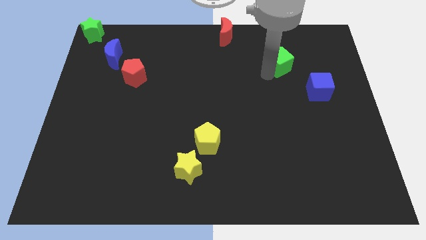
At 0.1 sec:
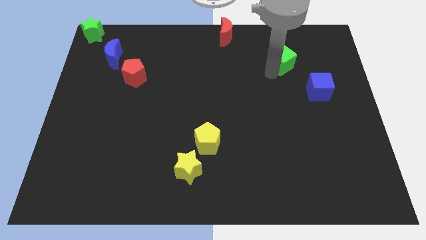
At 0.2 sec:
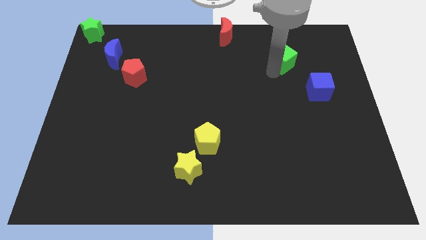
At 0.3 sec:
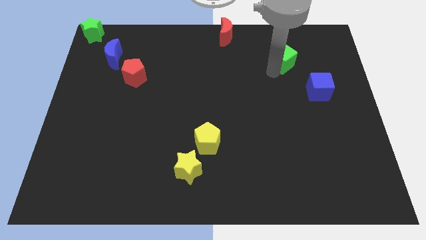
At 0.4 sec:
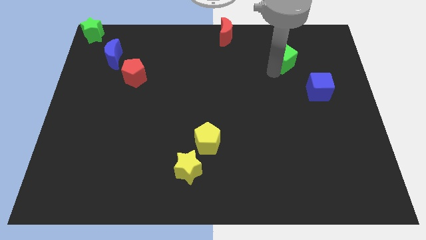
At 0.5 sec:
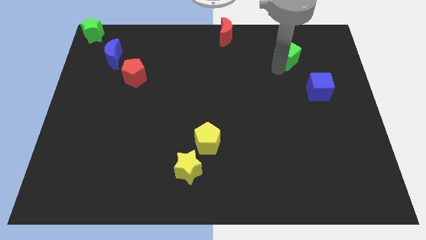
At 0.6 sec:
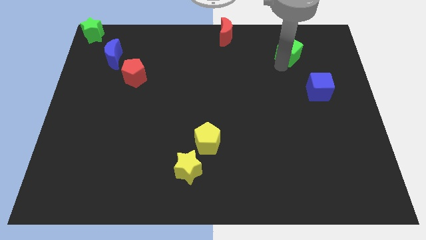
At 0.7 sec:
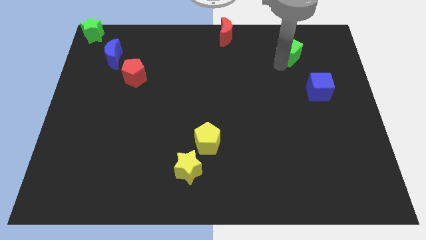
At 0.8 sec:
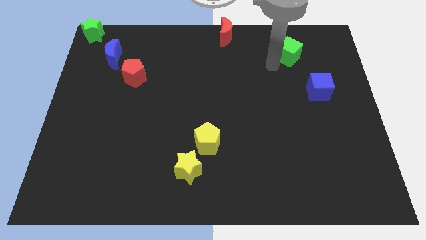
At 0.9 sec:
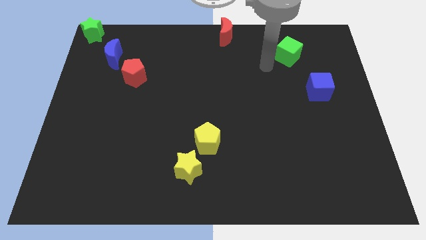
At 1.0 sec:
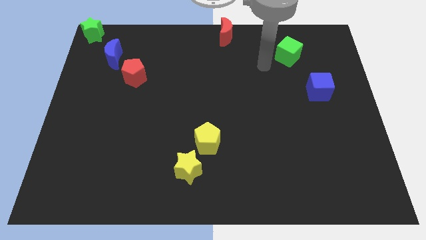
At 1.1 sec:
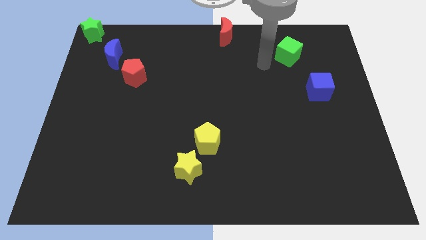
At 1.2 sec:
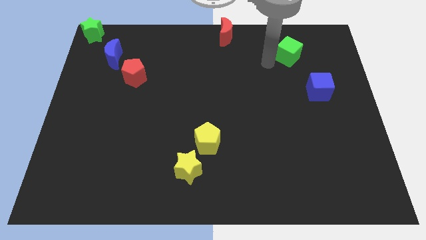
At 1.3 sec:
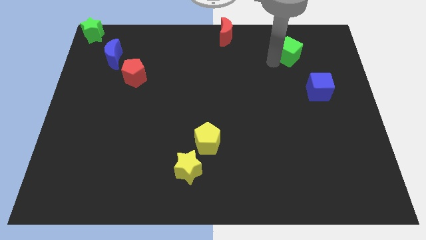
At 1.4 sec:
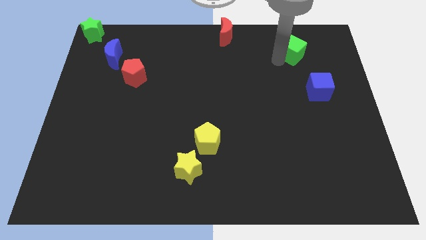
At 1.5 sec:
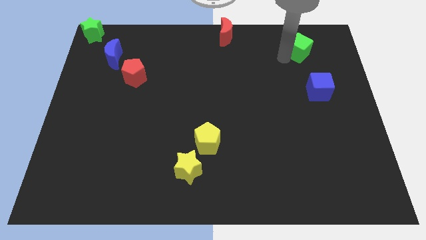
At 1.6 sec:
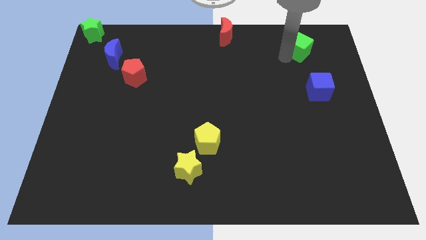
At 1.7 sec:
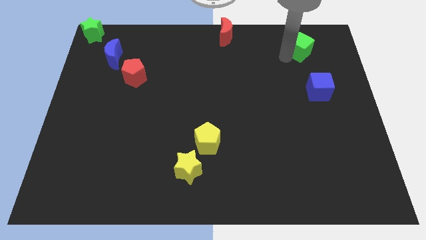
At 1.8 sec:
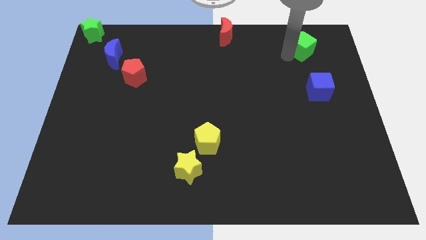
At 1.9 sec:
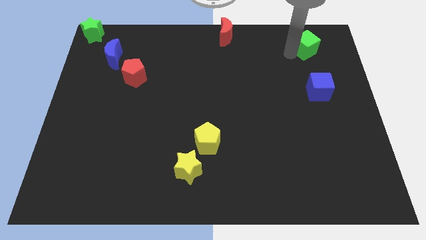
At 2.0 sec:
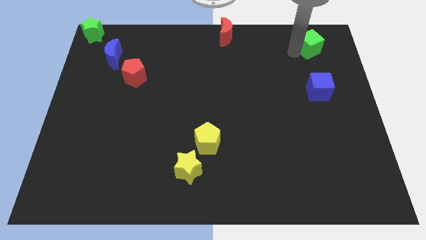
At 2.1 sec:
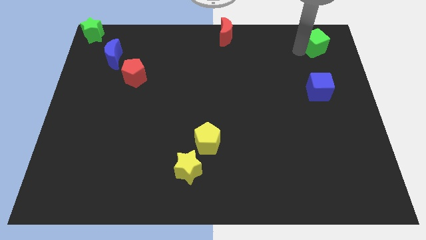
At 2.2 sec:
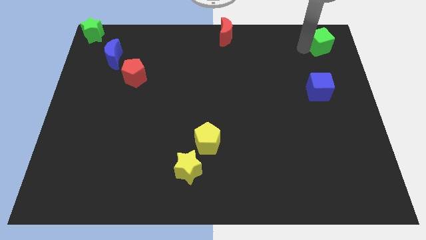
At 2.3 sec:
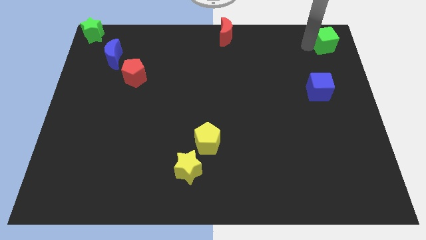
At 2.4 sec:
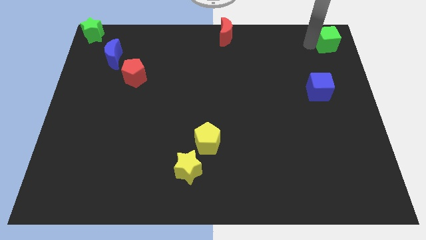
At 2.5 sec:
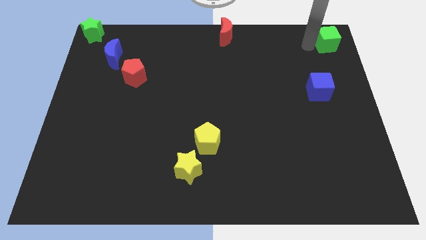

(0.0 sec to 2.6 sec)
push the green cube to the top right of the board

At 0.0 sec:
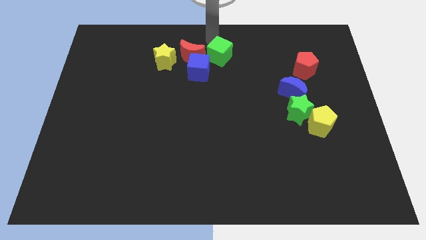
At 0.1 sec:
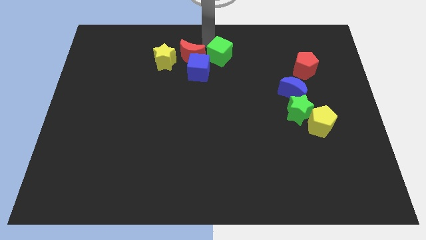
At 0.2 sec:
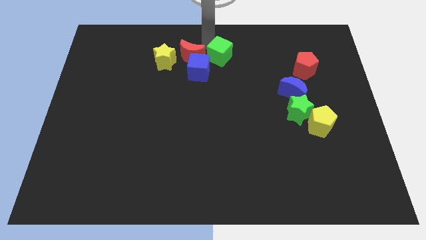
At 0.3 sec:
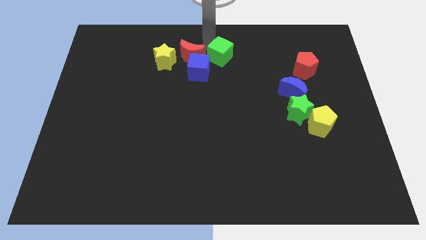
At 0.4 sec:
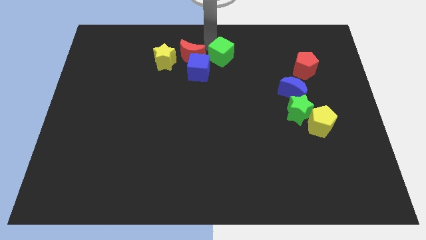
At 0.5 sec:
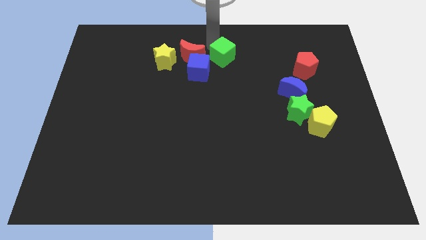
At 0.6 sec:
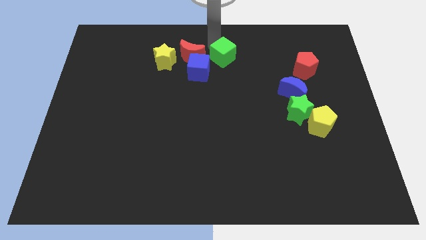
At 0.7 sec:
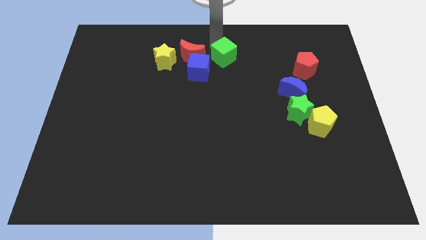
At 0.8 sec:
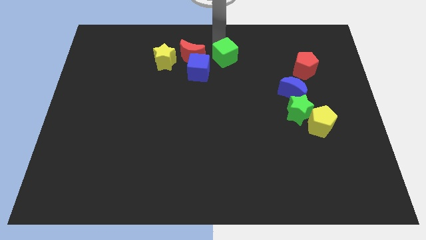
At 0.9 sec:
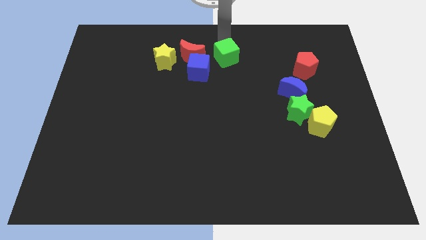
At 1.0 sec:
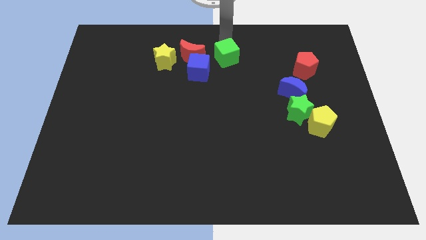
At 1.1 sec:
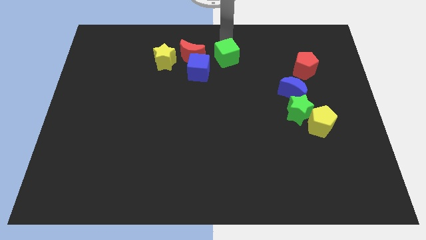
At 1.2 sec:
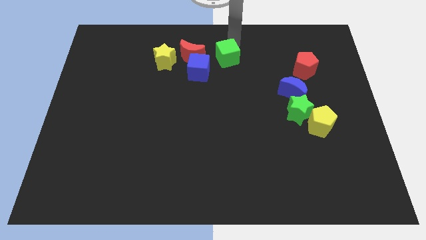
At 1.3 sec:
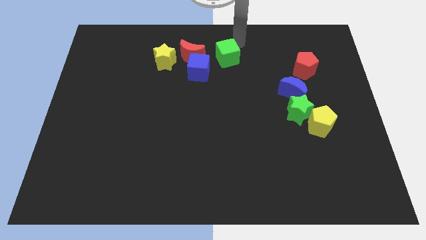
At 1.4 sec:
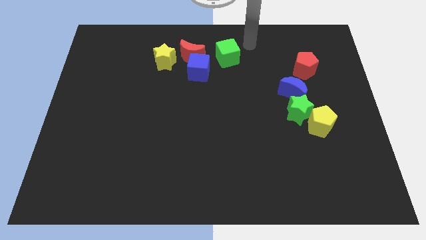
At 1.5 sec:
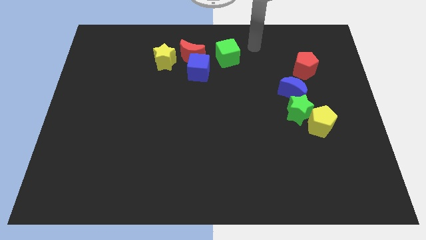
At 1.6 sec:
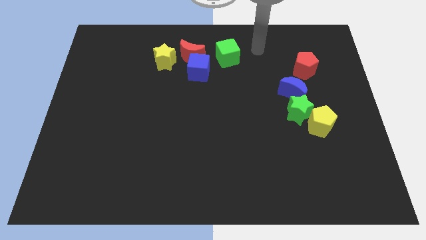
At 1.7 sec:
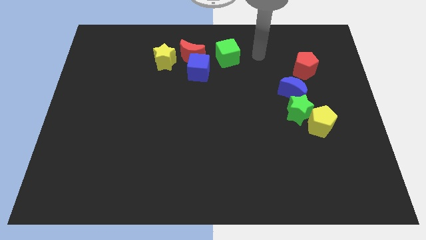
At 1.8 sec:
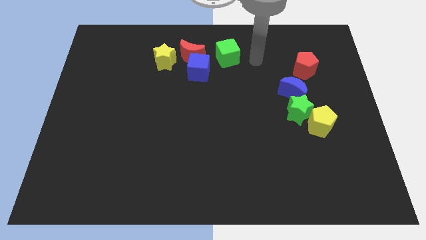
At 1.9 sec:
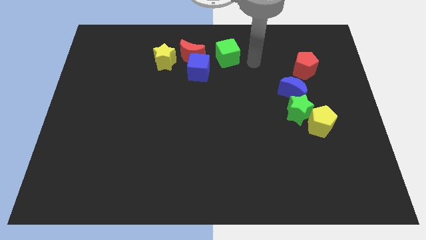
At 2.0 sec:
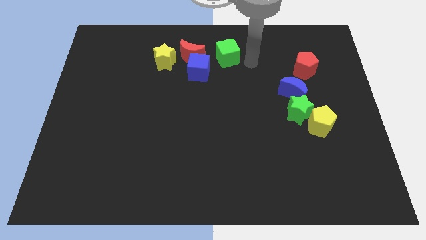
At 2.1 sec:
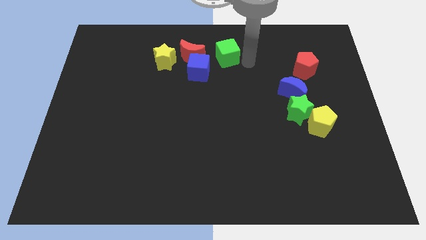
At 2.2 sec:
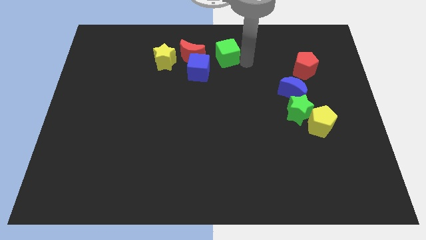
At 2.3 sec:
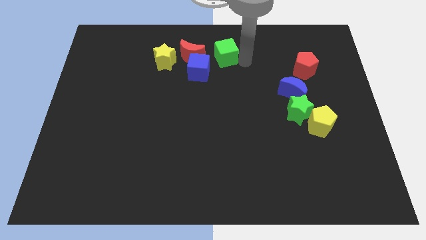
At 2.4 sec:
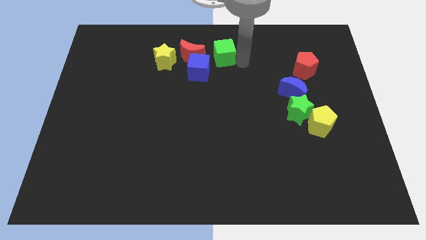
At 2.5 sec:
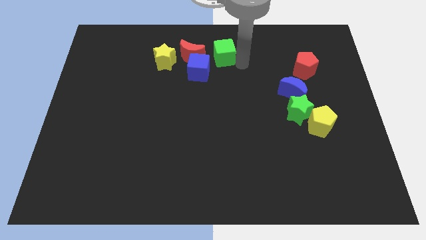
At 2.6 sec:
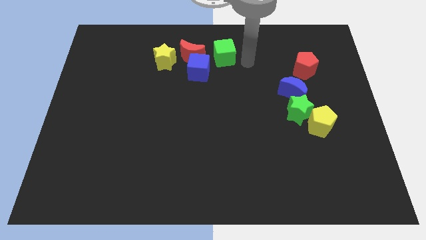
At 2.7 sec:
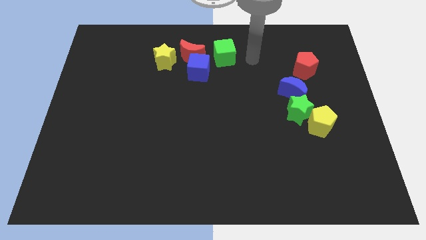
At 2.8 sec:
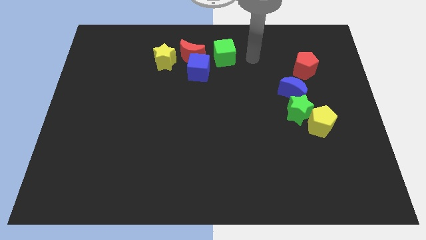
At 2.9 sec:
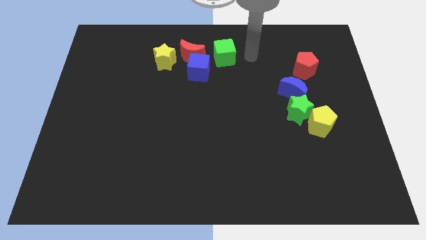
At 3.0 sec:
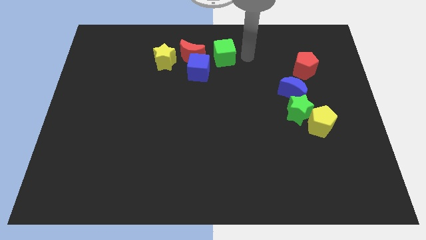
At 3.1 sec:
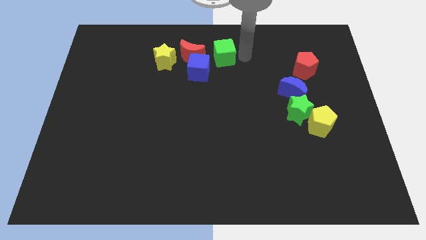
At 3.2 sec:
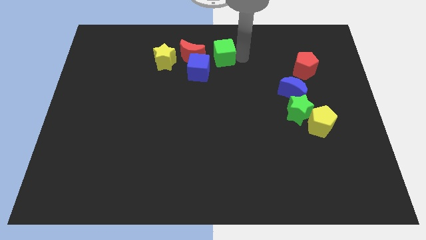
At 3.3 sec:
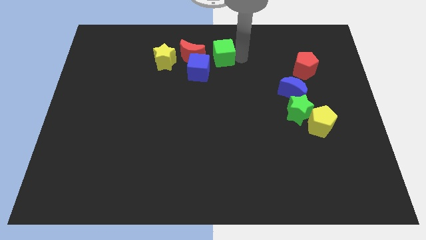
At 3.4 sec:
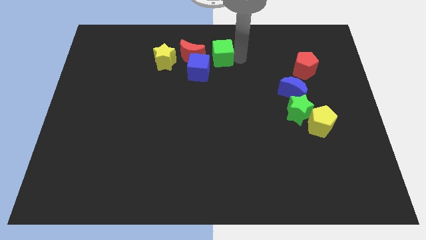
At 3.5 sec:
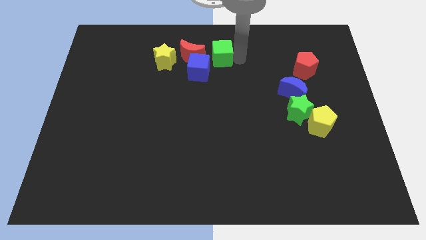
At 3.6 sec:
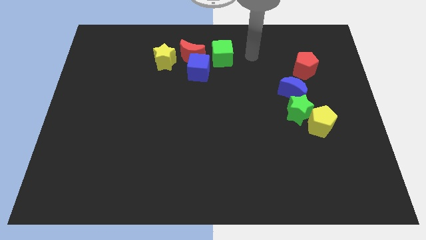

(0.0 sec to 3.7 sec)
put the green cube to the right side of the red moon

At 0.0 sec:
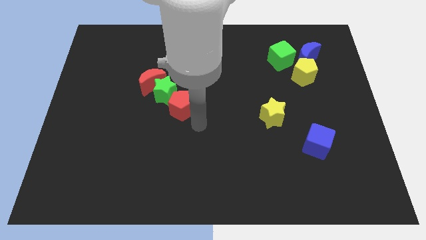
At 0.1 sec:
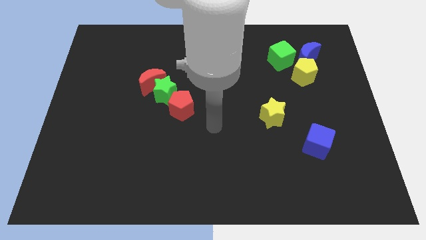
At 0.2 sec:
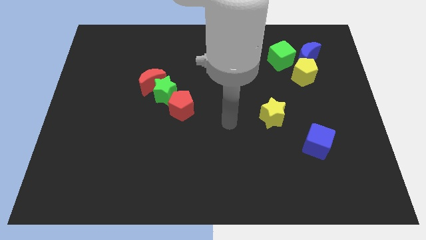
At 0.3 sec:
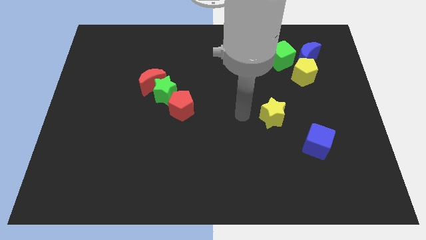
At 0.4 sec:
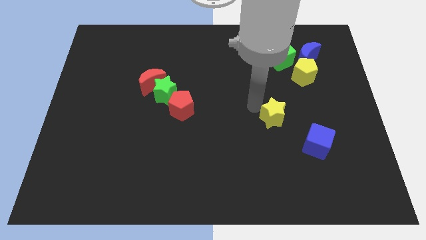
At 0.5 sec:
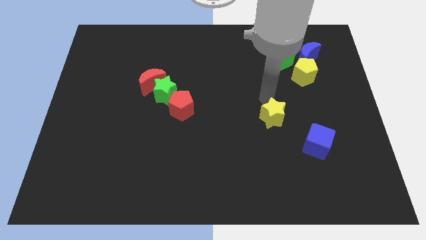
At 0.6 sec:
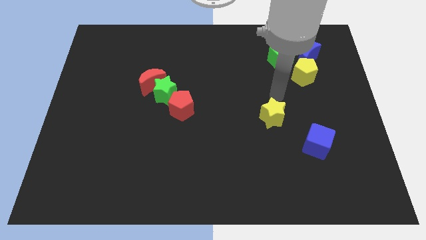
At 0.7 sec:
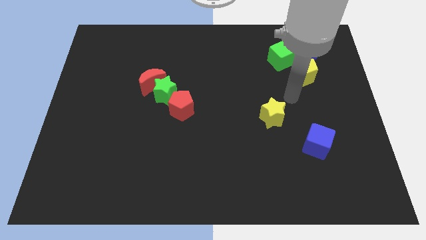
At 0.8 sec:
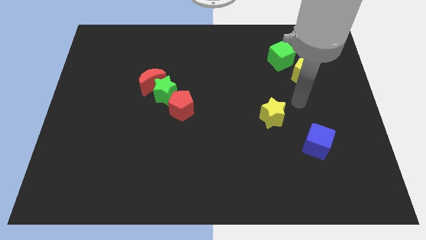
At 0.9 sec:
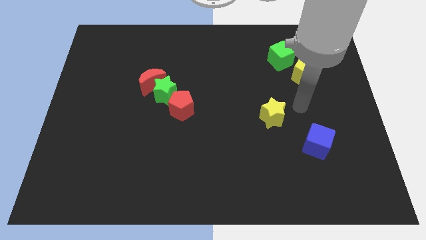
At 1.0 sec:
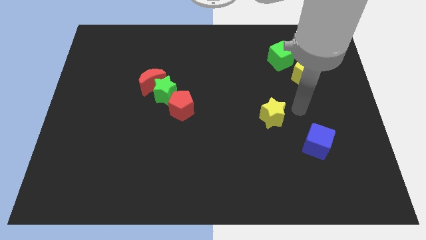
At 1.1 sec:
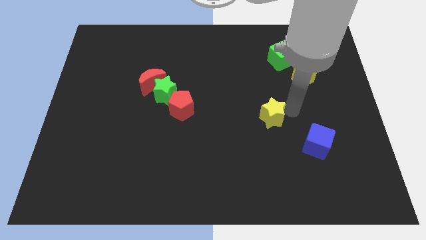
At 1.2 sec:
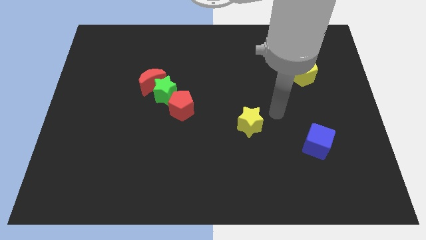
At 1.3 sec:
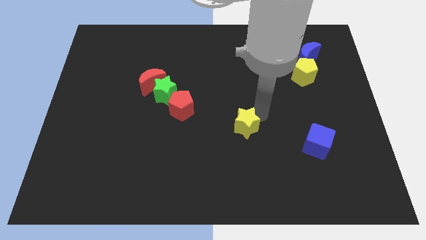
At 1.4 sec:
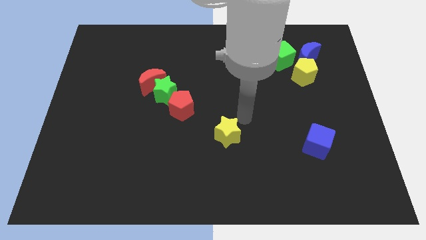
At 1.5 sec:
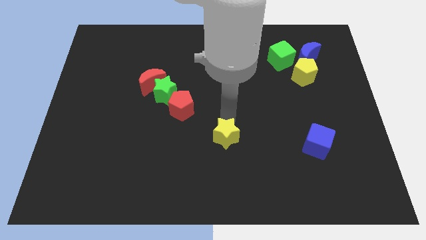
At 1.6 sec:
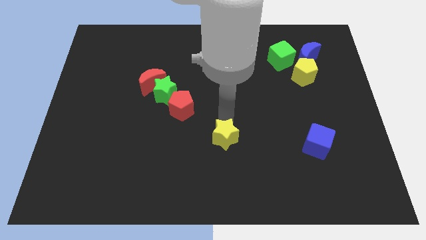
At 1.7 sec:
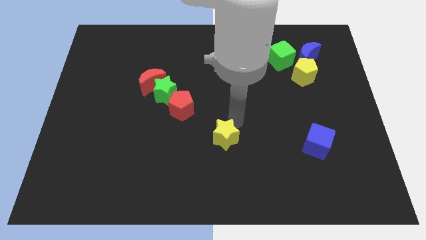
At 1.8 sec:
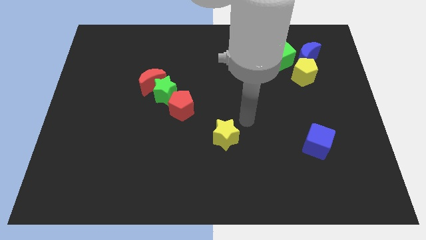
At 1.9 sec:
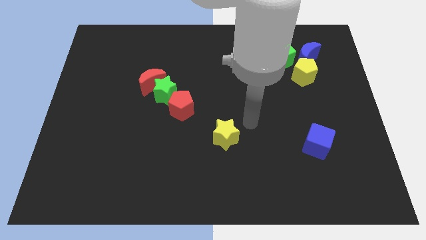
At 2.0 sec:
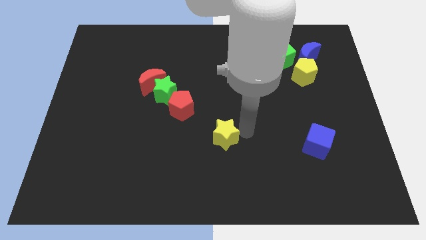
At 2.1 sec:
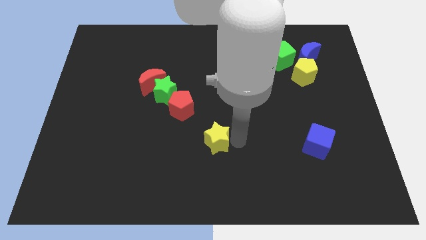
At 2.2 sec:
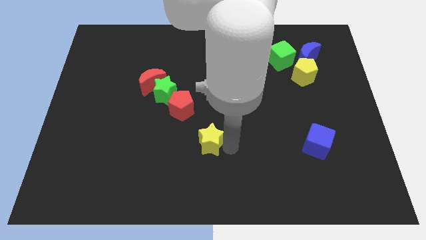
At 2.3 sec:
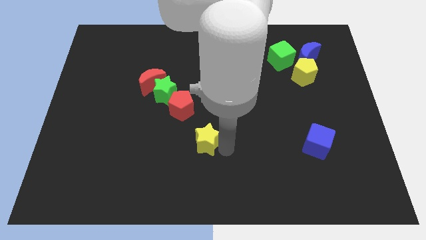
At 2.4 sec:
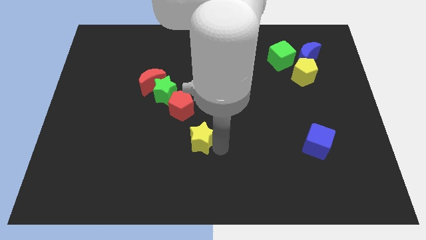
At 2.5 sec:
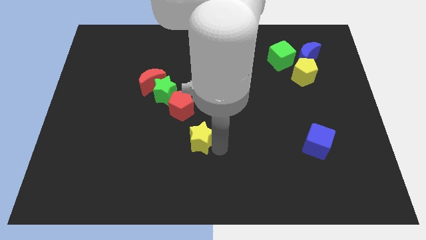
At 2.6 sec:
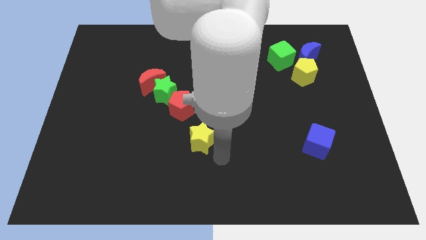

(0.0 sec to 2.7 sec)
move the yellow star parallel to the red pentagon
